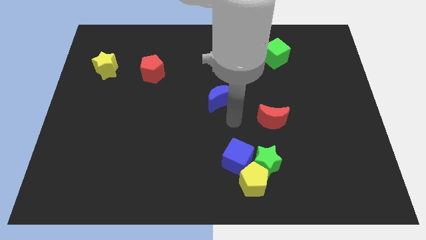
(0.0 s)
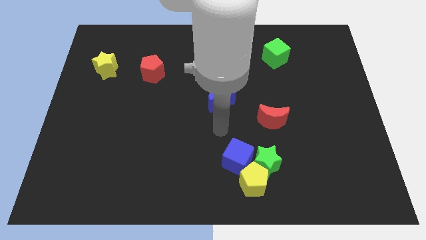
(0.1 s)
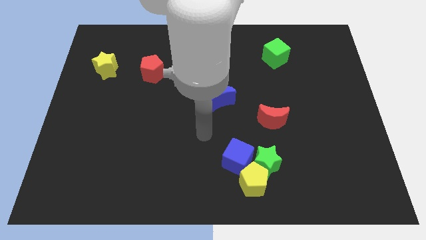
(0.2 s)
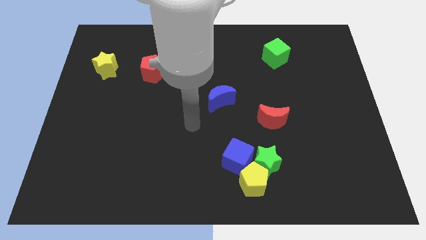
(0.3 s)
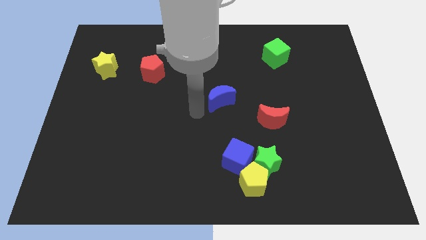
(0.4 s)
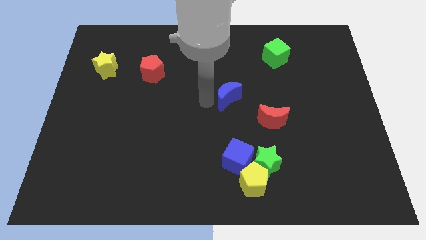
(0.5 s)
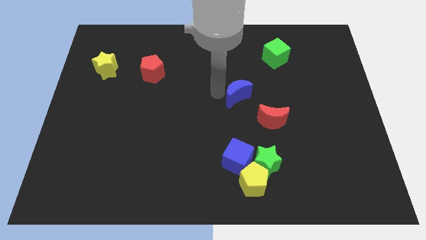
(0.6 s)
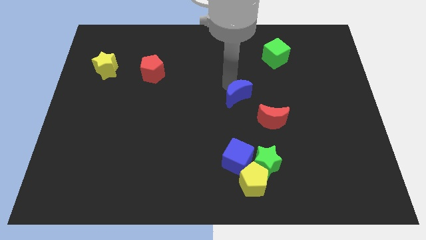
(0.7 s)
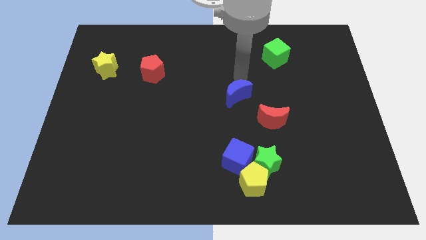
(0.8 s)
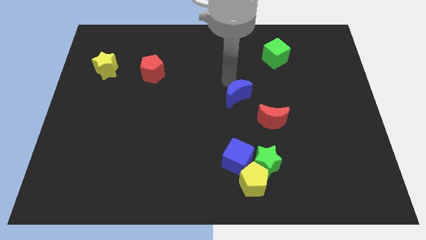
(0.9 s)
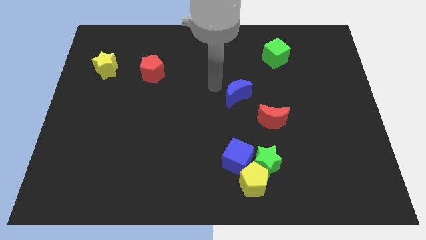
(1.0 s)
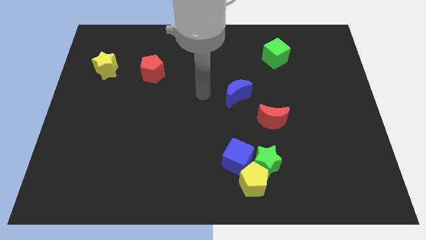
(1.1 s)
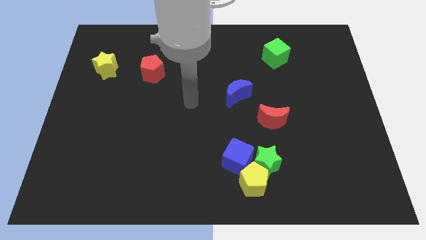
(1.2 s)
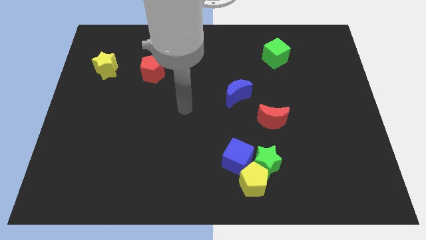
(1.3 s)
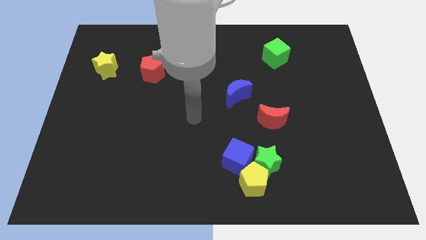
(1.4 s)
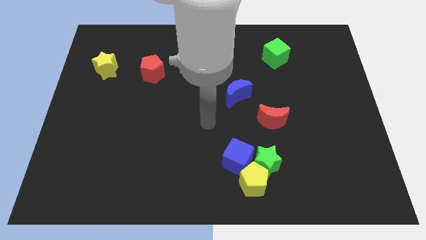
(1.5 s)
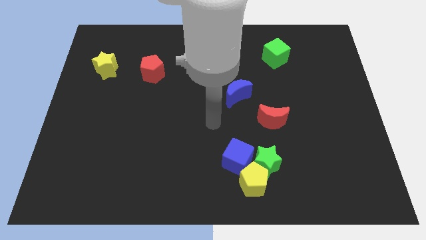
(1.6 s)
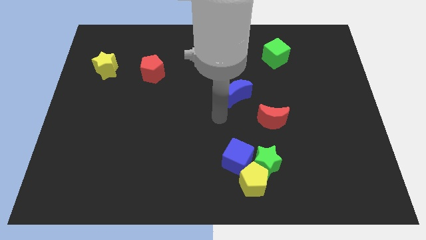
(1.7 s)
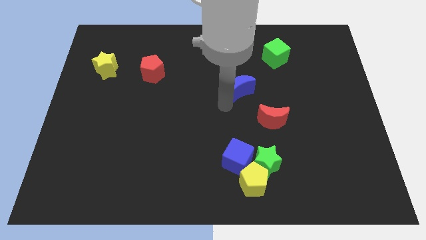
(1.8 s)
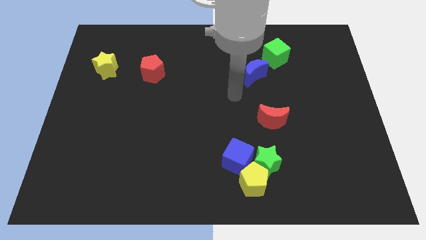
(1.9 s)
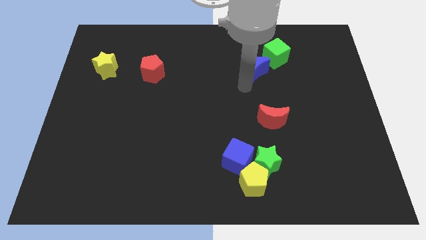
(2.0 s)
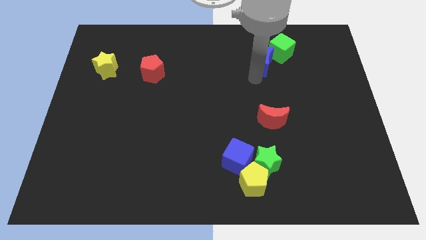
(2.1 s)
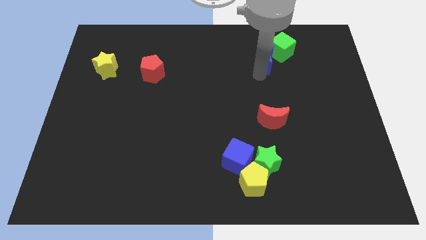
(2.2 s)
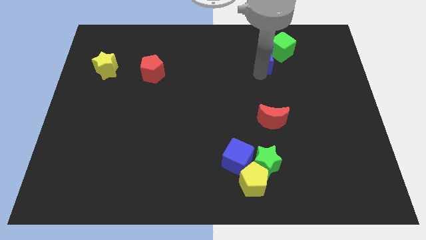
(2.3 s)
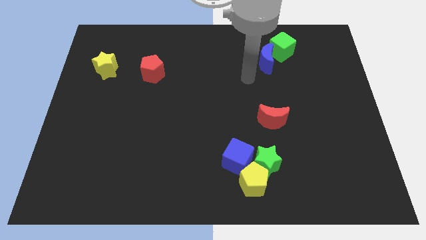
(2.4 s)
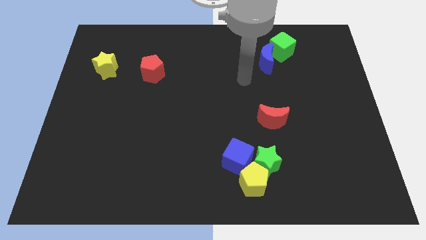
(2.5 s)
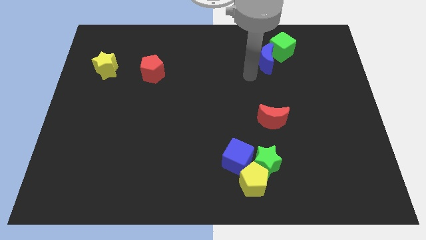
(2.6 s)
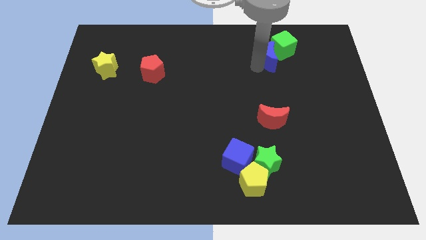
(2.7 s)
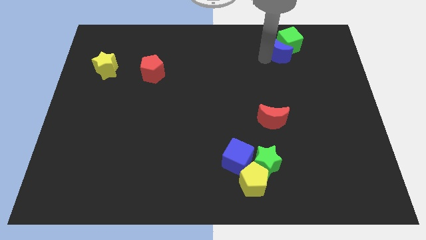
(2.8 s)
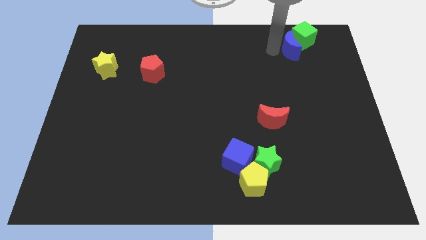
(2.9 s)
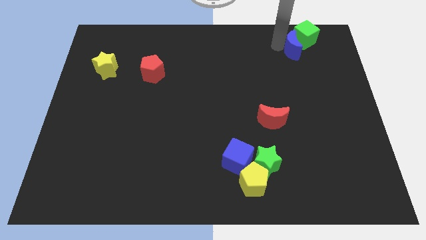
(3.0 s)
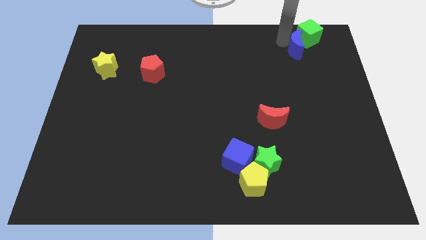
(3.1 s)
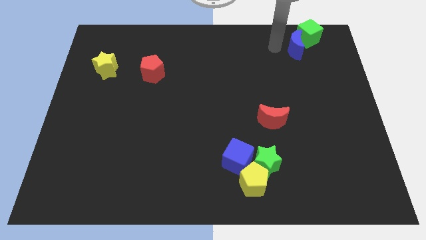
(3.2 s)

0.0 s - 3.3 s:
move the blue moon into green cube and push them to the top right

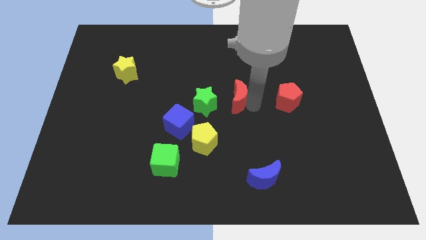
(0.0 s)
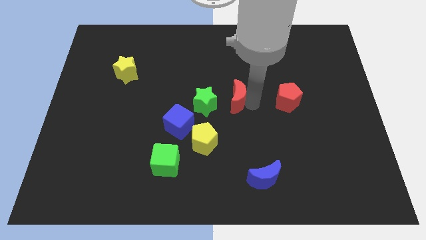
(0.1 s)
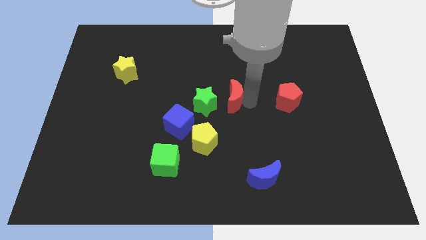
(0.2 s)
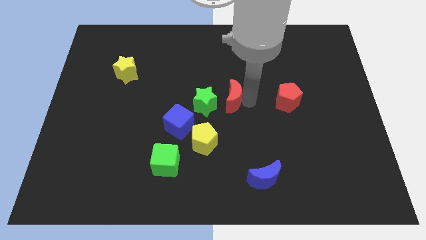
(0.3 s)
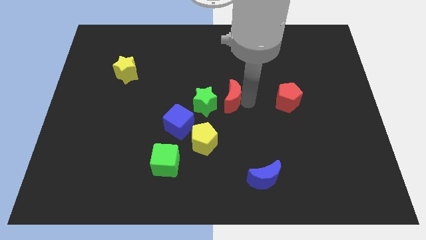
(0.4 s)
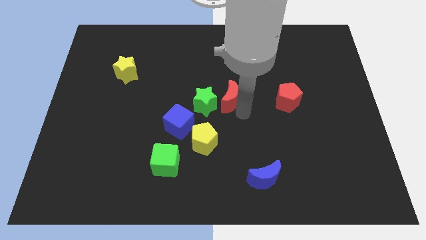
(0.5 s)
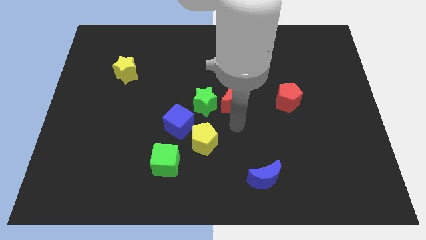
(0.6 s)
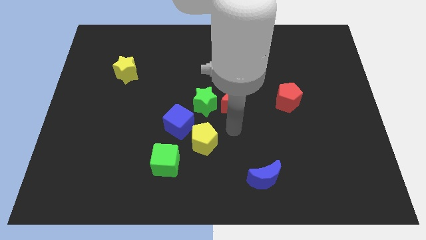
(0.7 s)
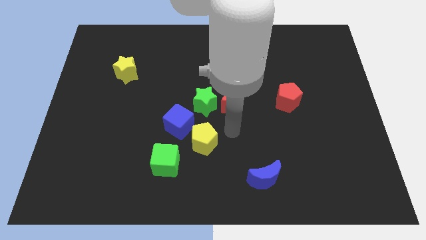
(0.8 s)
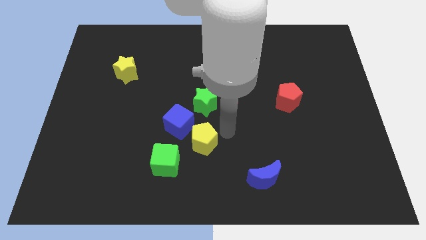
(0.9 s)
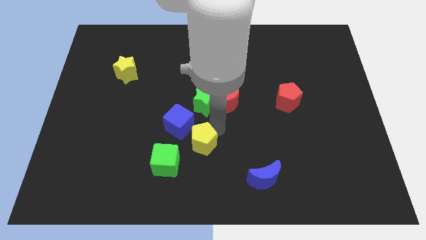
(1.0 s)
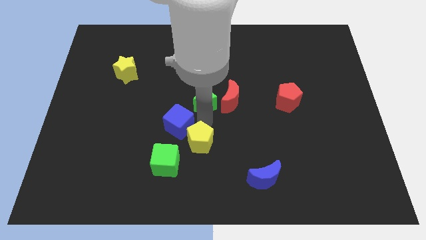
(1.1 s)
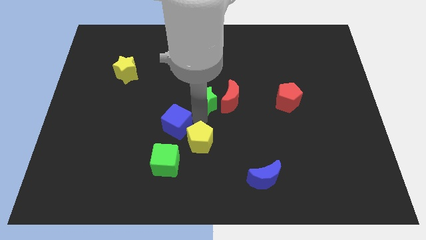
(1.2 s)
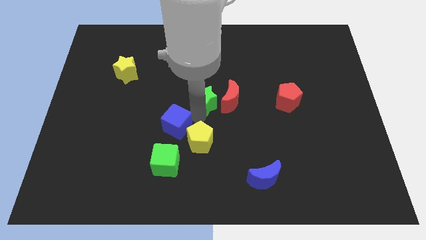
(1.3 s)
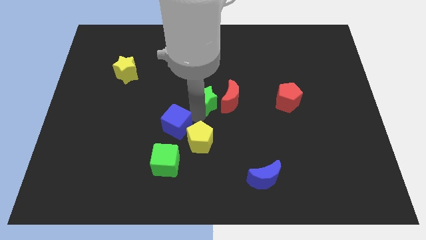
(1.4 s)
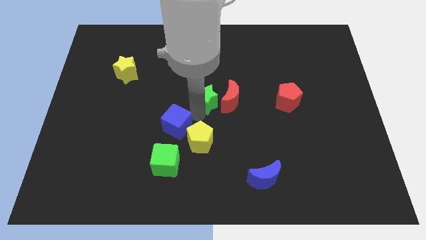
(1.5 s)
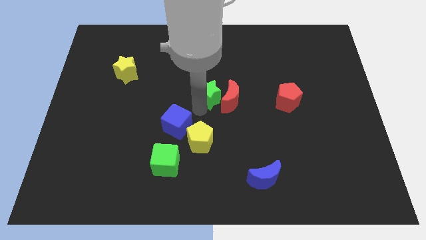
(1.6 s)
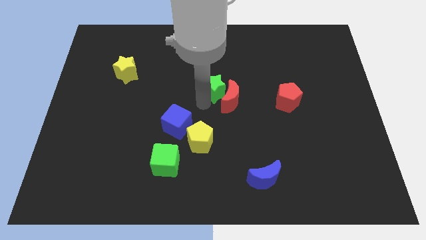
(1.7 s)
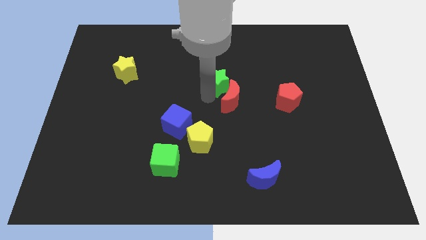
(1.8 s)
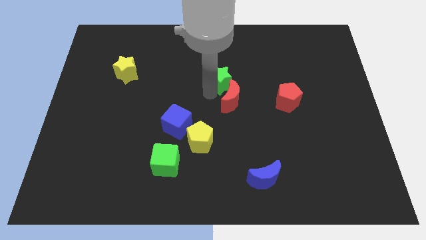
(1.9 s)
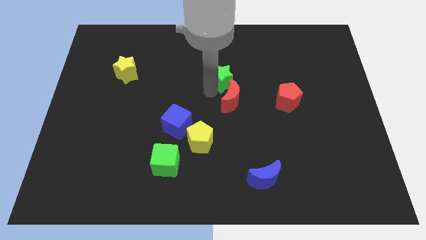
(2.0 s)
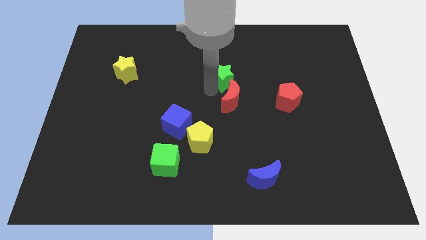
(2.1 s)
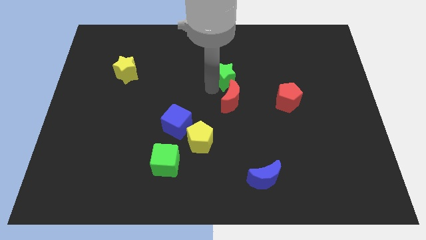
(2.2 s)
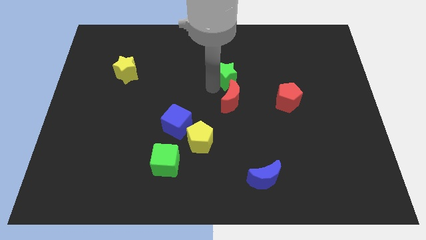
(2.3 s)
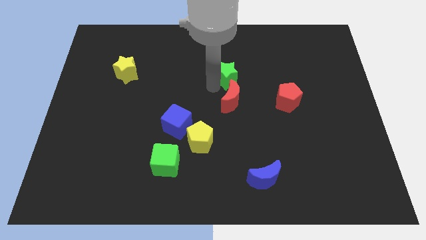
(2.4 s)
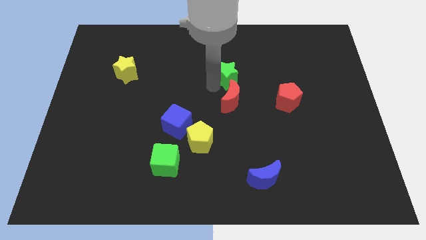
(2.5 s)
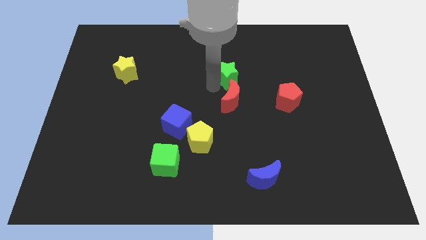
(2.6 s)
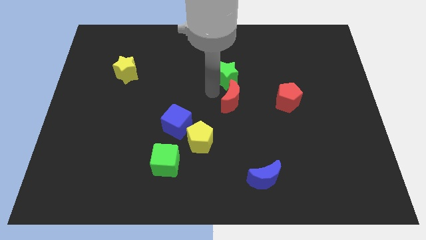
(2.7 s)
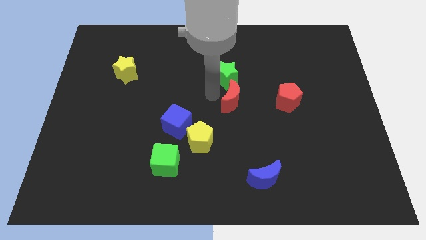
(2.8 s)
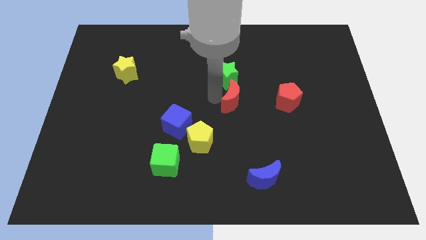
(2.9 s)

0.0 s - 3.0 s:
push green star above red crescent

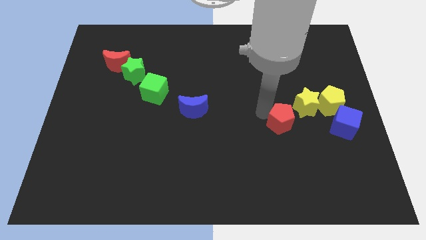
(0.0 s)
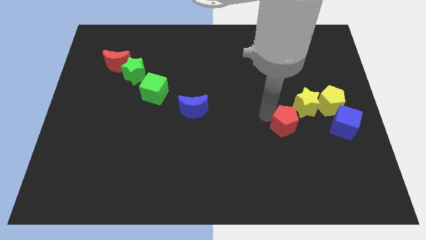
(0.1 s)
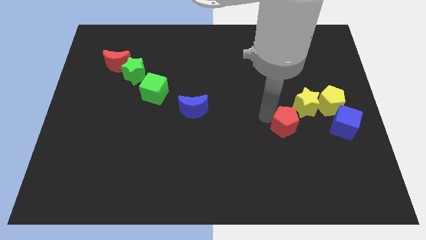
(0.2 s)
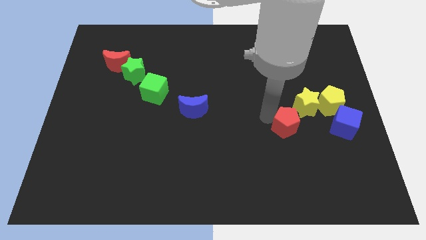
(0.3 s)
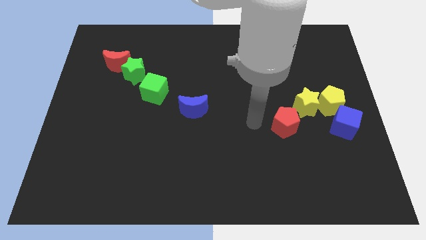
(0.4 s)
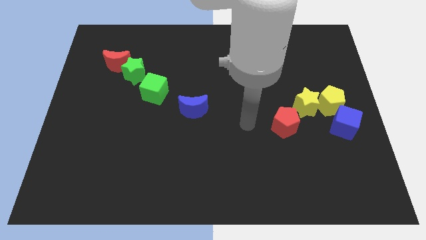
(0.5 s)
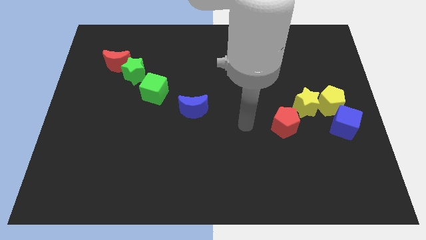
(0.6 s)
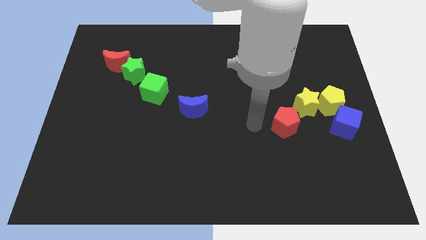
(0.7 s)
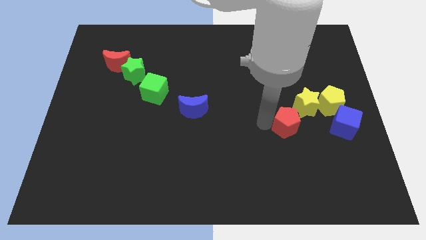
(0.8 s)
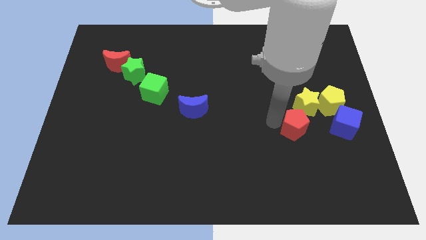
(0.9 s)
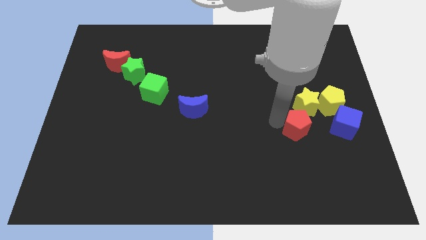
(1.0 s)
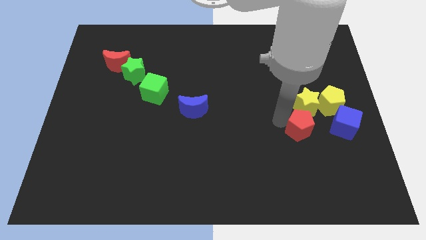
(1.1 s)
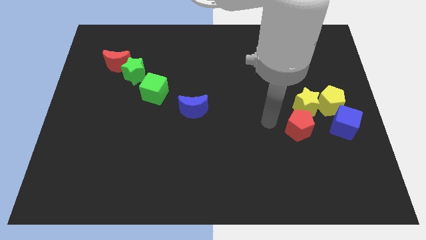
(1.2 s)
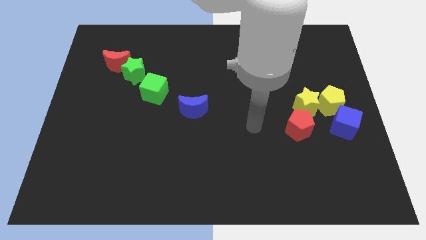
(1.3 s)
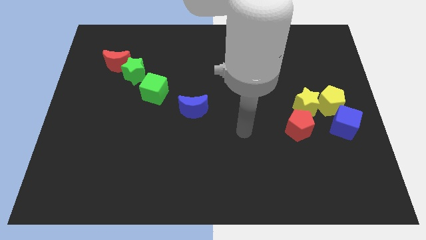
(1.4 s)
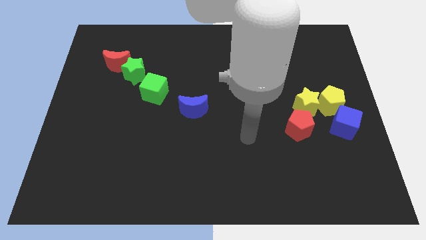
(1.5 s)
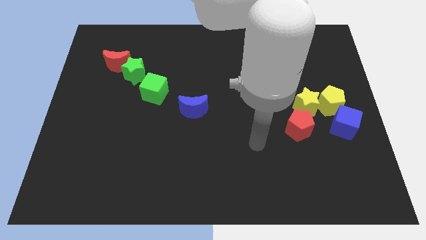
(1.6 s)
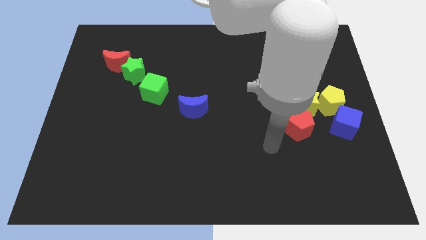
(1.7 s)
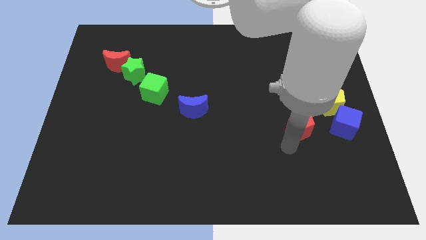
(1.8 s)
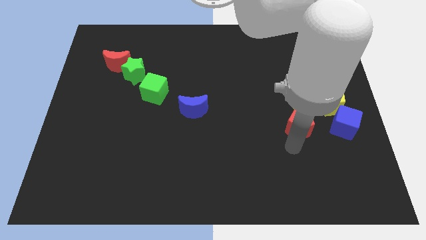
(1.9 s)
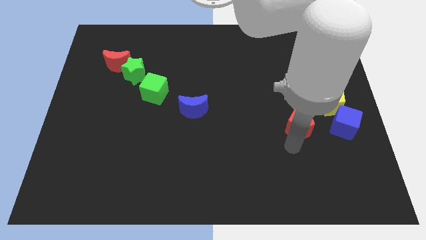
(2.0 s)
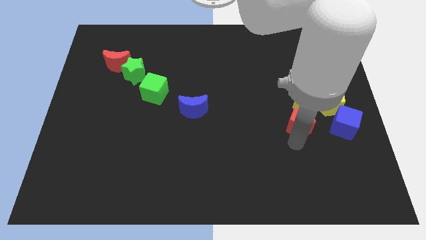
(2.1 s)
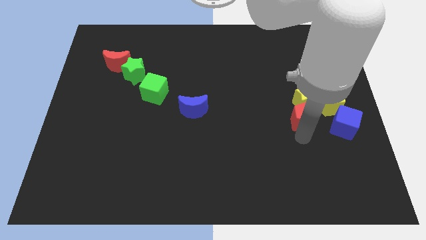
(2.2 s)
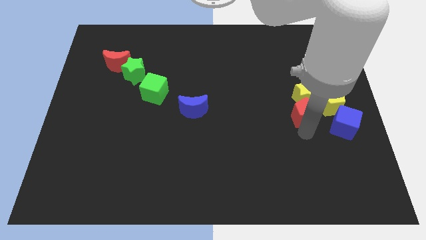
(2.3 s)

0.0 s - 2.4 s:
place the red pentagon below the yellow star

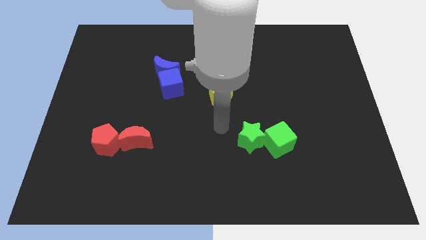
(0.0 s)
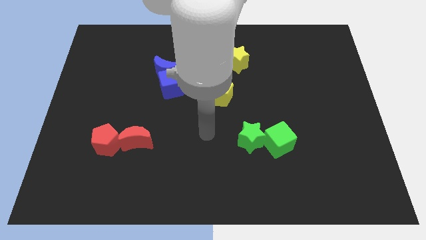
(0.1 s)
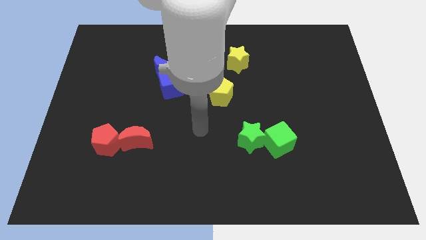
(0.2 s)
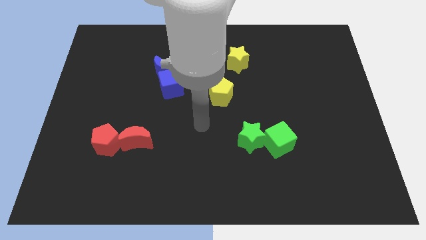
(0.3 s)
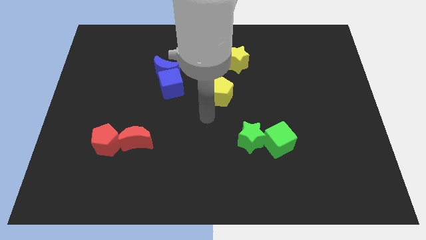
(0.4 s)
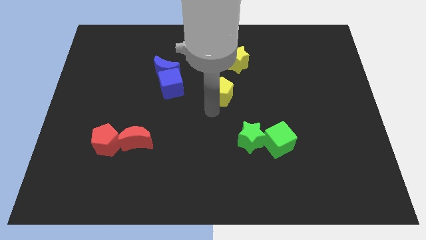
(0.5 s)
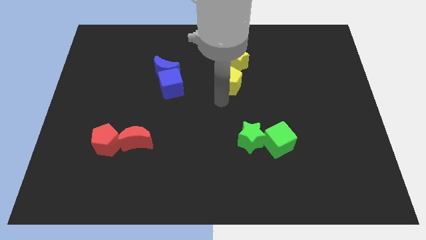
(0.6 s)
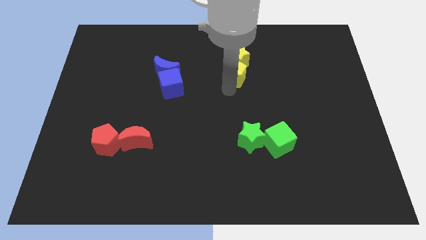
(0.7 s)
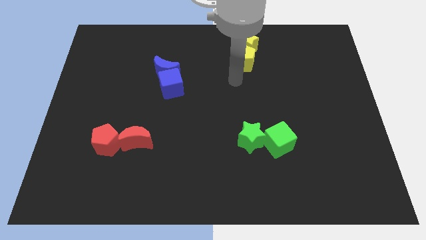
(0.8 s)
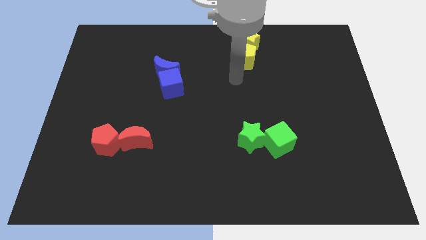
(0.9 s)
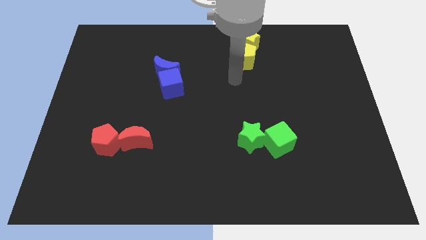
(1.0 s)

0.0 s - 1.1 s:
push the yellow pentagon into the yellow star
